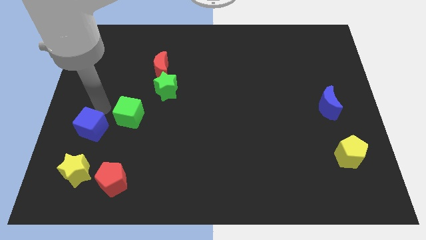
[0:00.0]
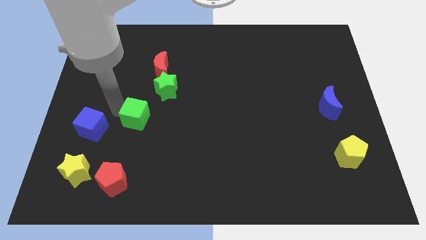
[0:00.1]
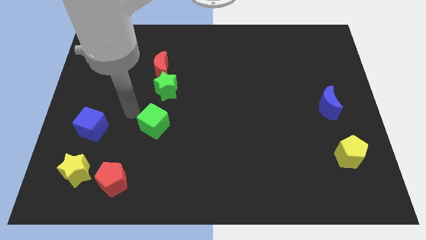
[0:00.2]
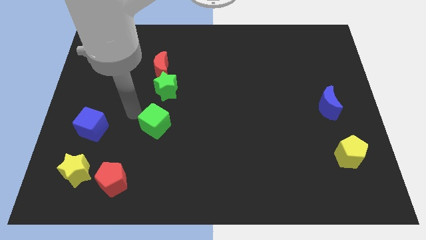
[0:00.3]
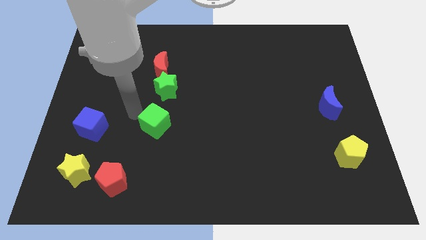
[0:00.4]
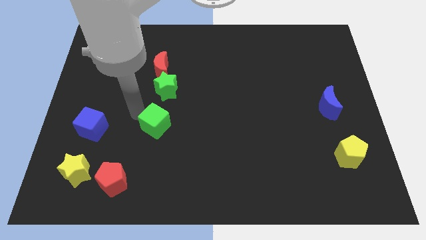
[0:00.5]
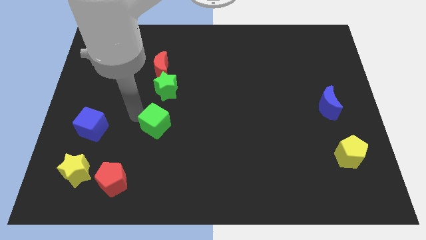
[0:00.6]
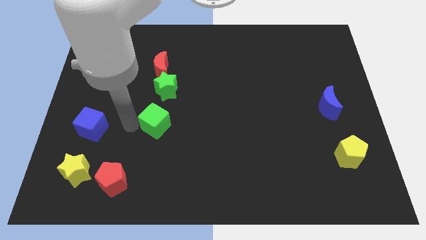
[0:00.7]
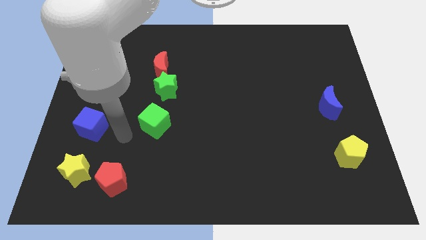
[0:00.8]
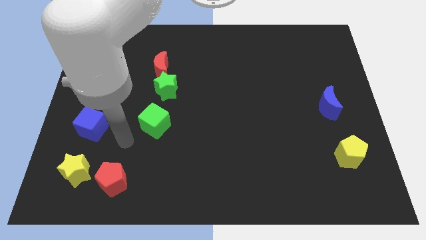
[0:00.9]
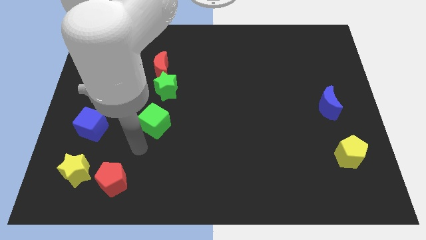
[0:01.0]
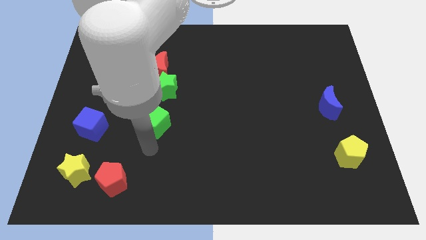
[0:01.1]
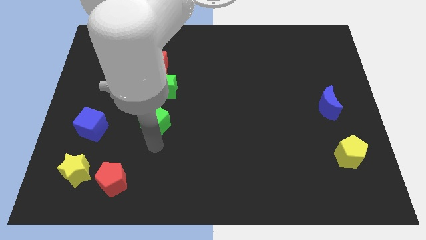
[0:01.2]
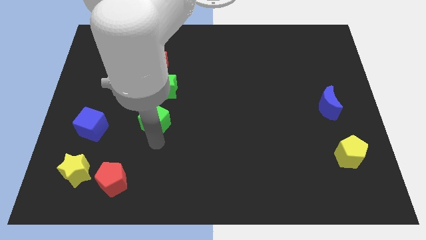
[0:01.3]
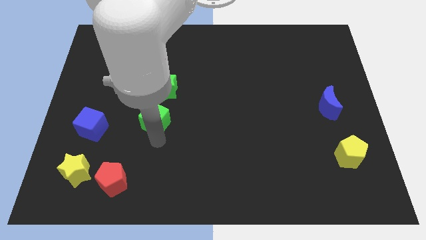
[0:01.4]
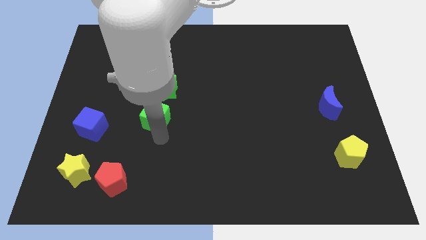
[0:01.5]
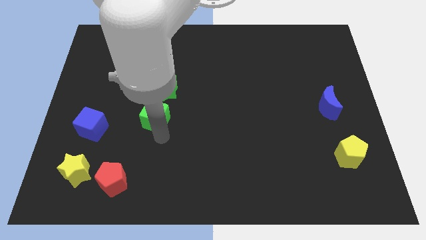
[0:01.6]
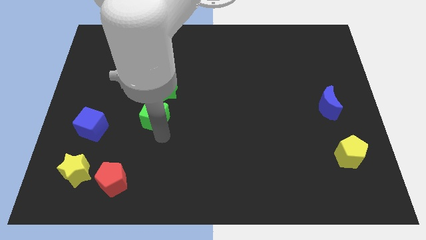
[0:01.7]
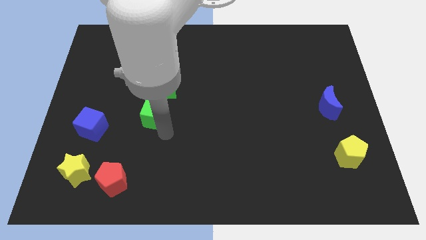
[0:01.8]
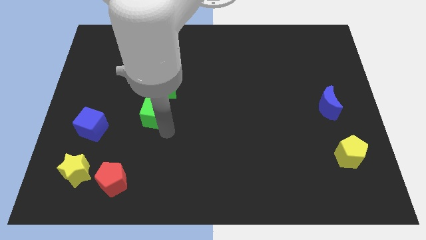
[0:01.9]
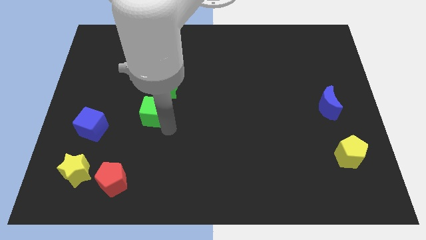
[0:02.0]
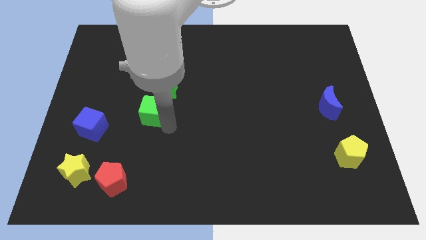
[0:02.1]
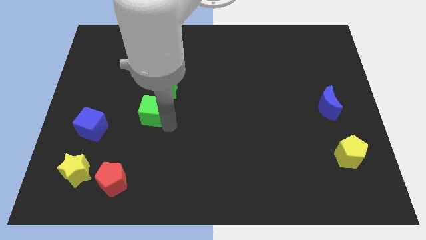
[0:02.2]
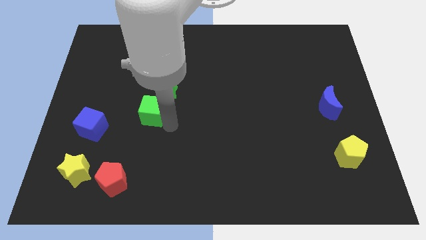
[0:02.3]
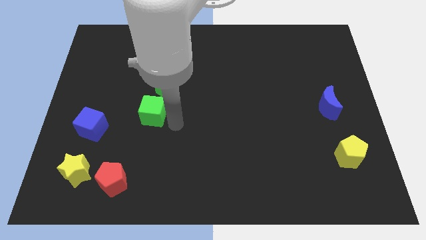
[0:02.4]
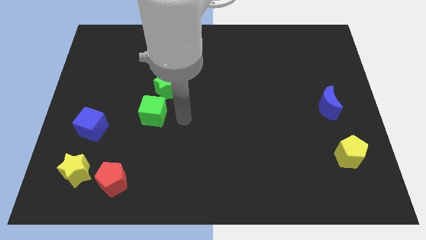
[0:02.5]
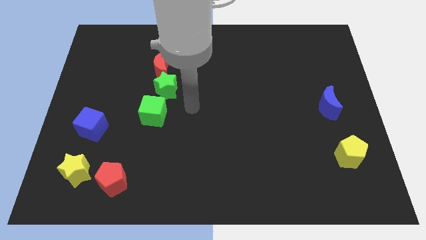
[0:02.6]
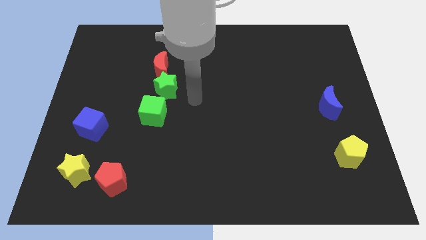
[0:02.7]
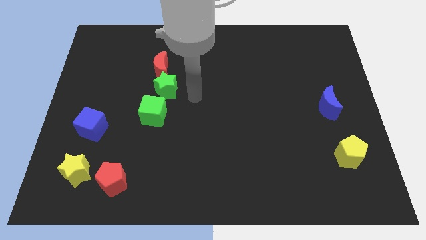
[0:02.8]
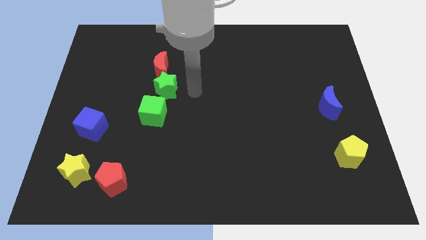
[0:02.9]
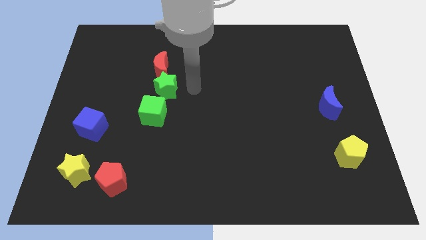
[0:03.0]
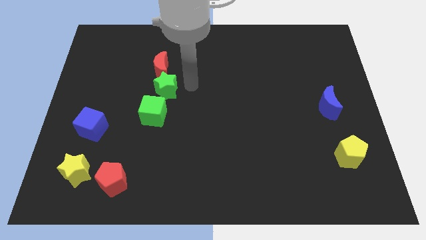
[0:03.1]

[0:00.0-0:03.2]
place green cube to the bottom left of the green star

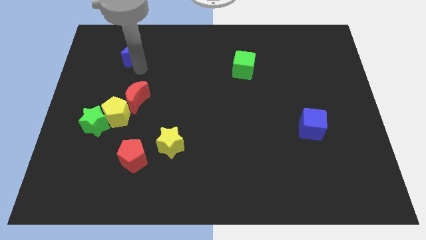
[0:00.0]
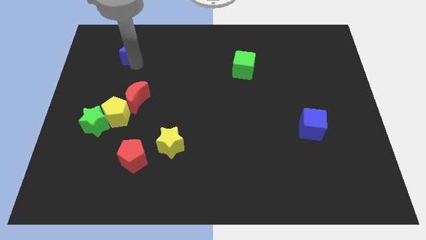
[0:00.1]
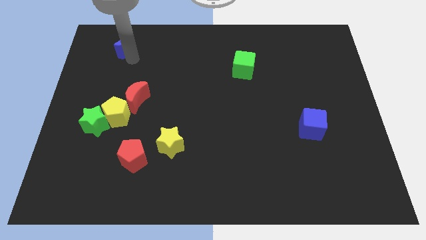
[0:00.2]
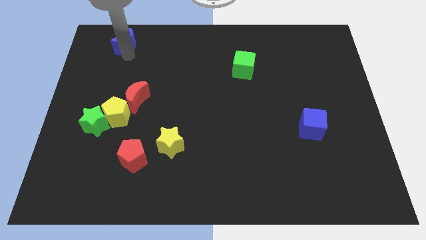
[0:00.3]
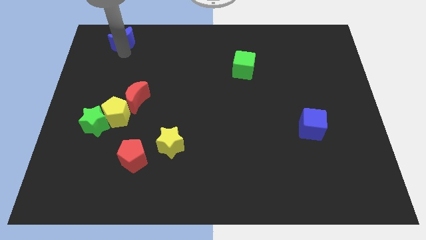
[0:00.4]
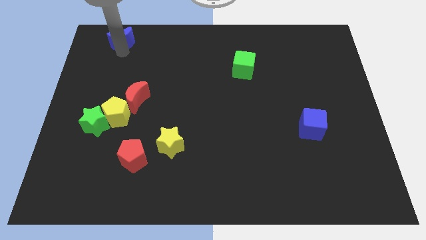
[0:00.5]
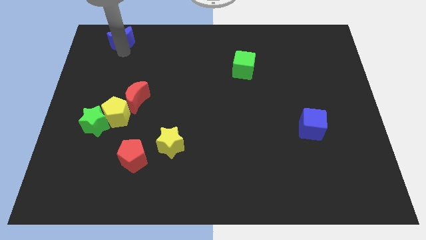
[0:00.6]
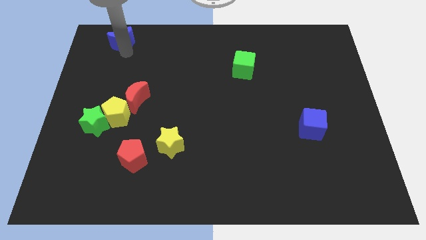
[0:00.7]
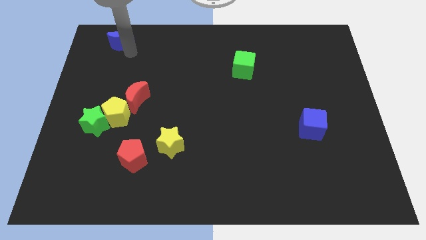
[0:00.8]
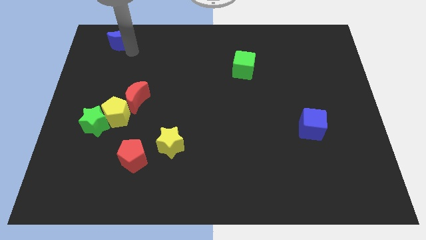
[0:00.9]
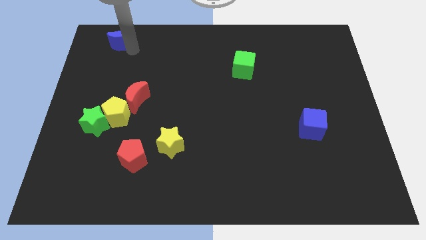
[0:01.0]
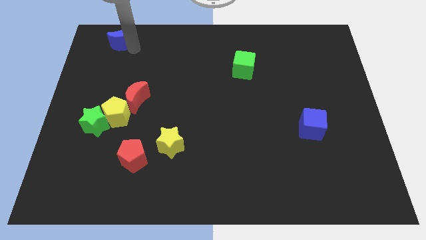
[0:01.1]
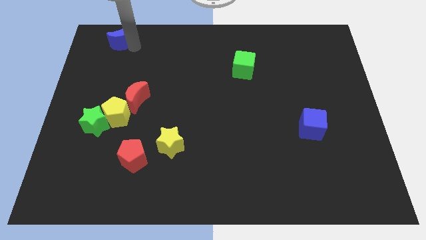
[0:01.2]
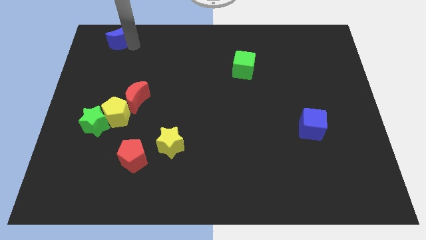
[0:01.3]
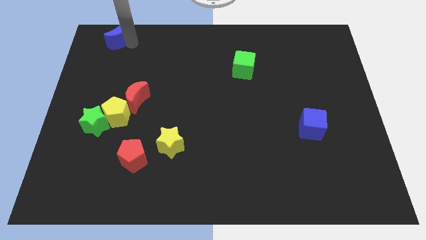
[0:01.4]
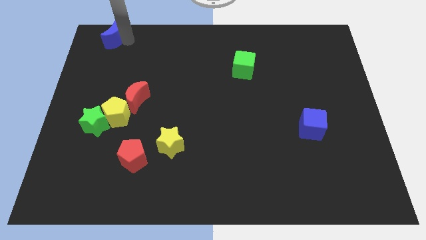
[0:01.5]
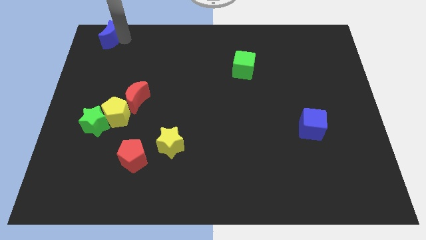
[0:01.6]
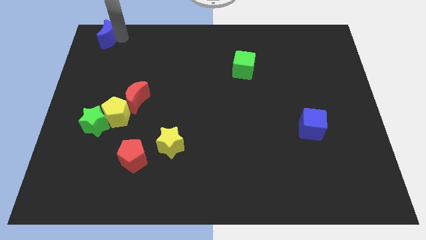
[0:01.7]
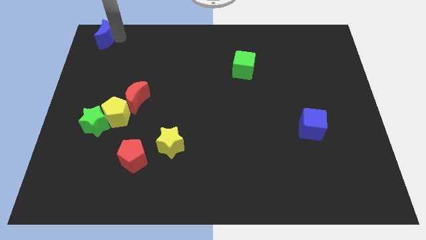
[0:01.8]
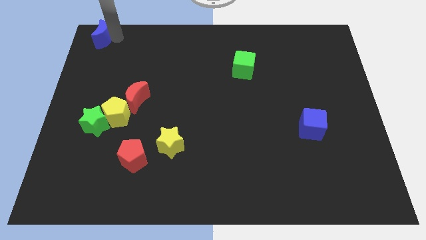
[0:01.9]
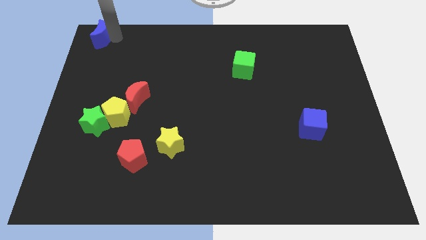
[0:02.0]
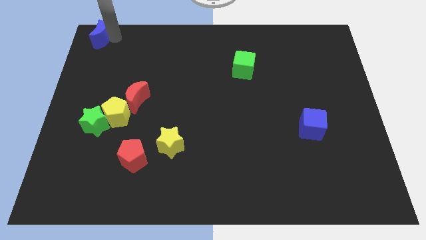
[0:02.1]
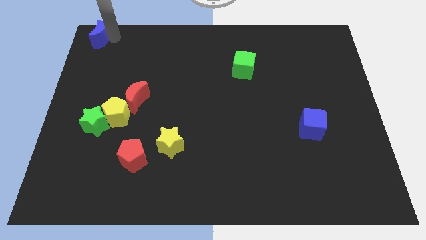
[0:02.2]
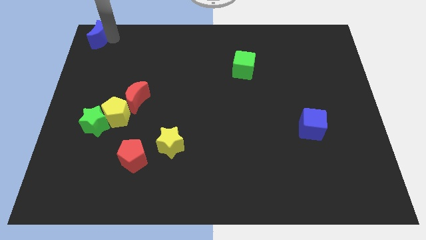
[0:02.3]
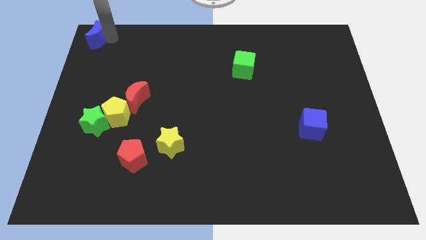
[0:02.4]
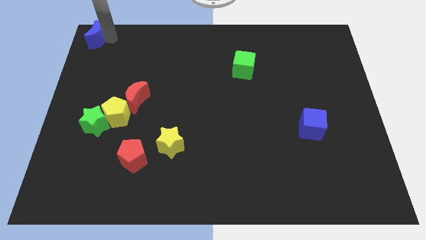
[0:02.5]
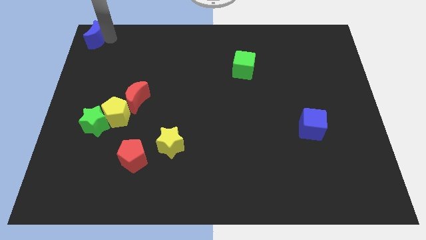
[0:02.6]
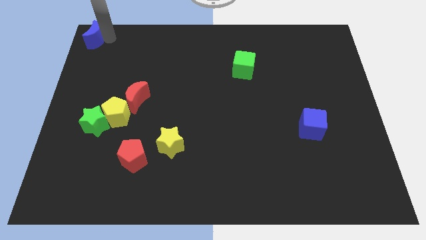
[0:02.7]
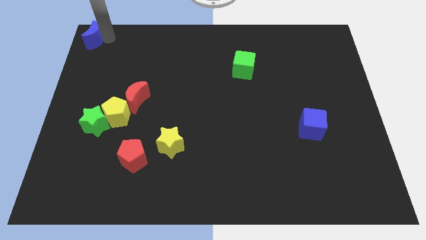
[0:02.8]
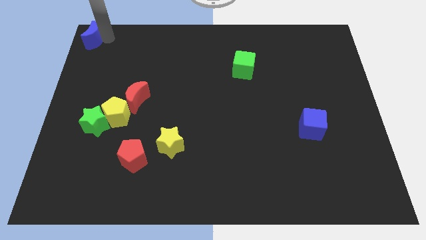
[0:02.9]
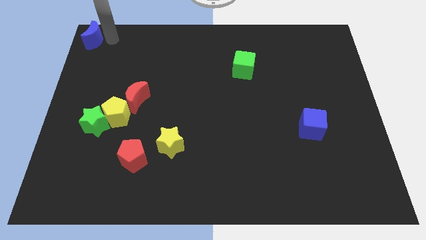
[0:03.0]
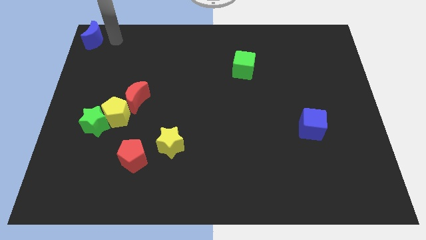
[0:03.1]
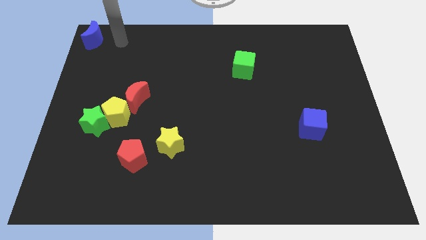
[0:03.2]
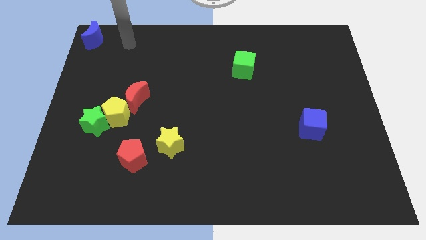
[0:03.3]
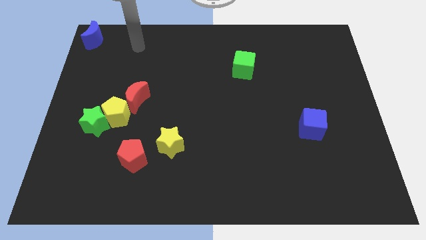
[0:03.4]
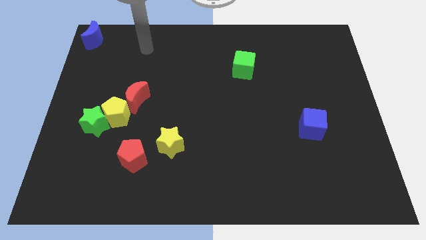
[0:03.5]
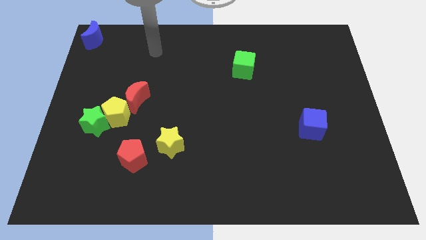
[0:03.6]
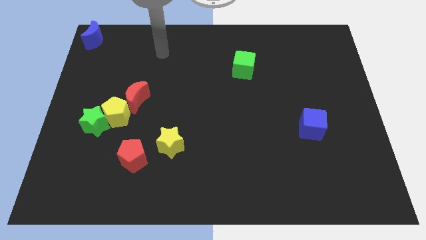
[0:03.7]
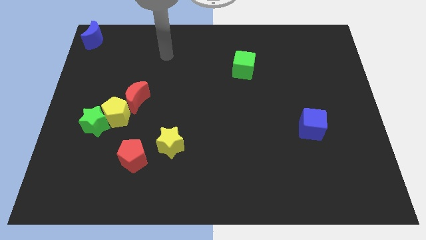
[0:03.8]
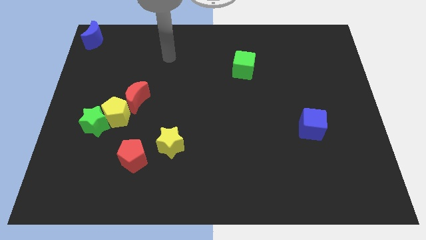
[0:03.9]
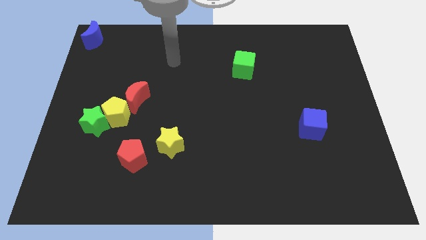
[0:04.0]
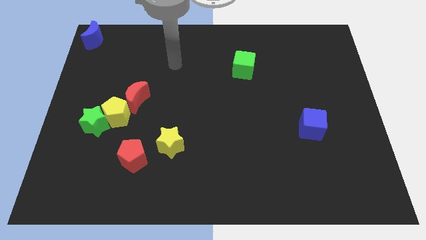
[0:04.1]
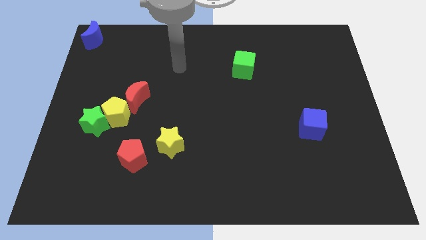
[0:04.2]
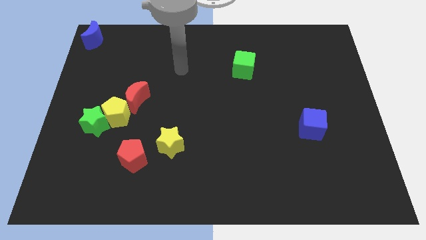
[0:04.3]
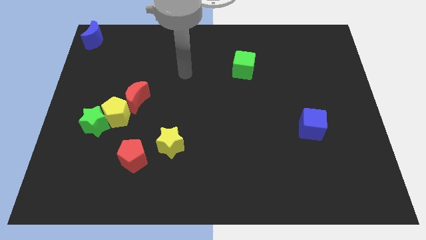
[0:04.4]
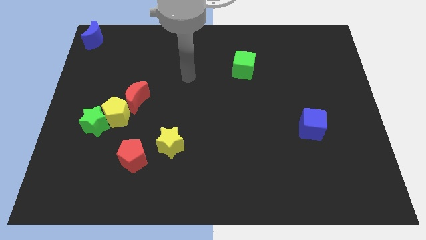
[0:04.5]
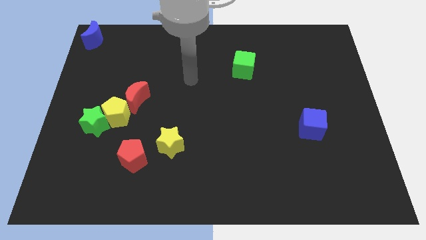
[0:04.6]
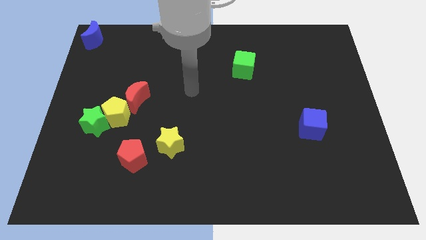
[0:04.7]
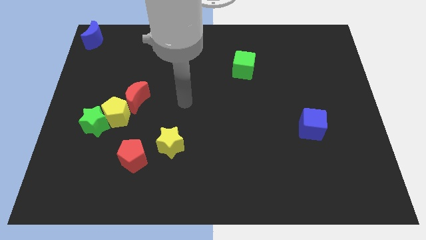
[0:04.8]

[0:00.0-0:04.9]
push blue moon to the top left

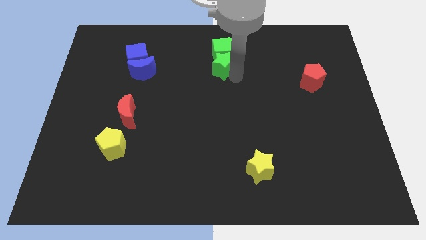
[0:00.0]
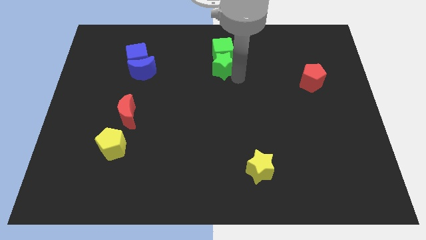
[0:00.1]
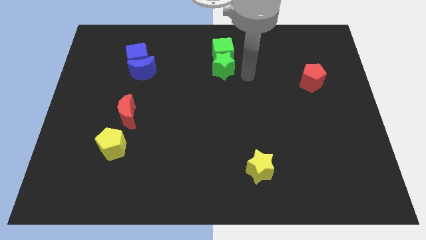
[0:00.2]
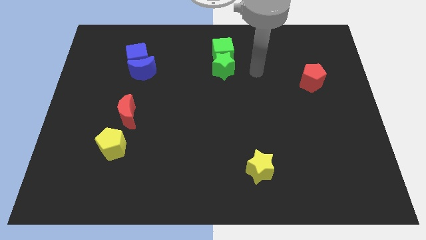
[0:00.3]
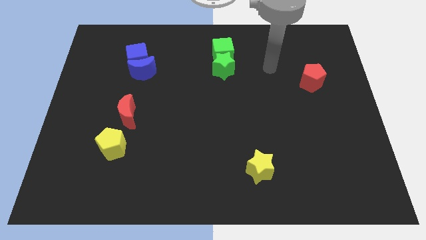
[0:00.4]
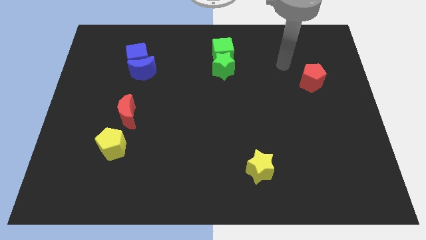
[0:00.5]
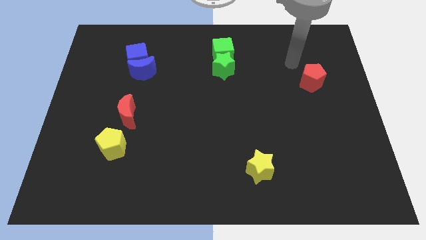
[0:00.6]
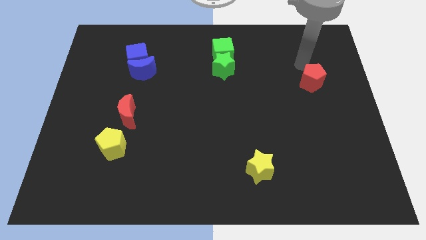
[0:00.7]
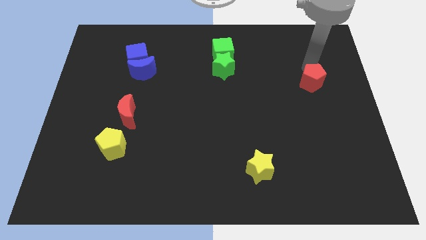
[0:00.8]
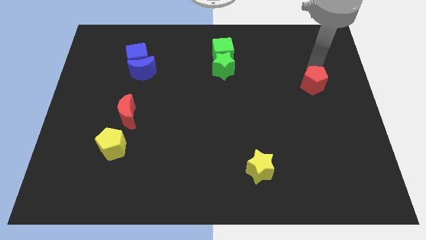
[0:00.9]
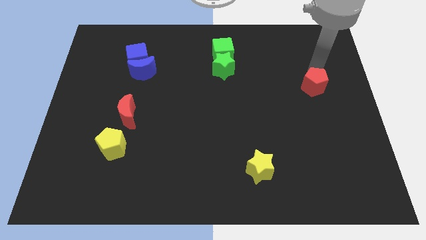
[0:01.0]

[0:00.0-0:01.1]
move your hand to the top of the red pentagon
